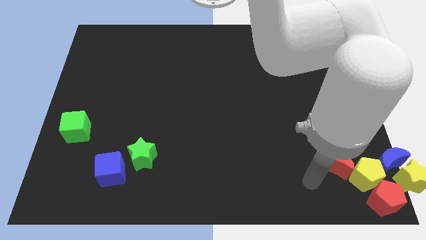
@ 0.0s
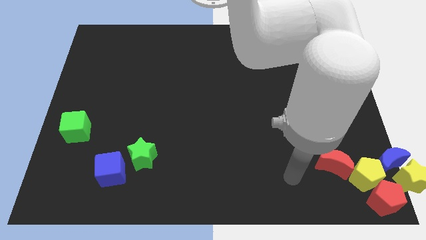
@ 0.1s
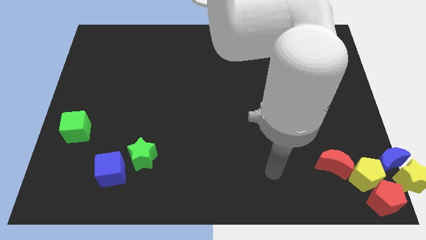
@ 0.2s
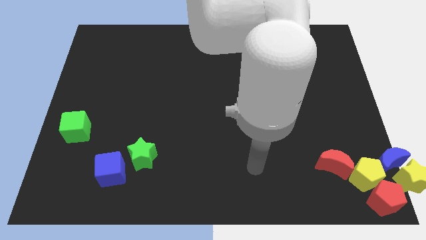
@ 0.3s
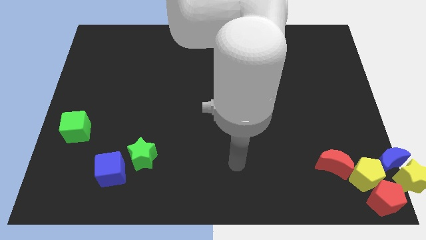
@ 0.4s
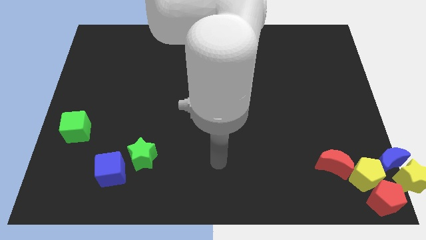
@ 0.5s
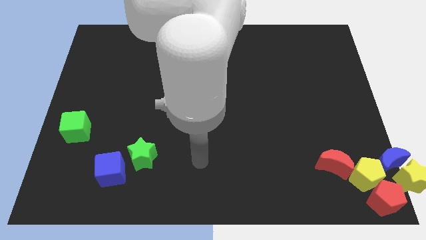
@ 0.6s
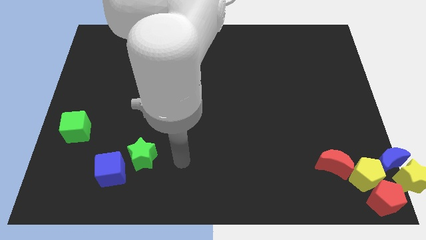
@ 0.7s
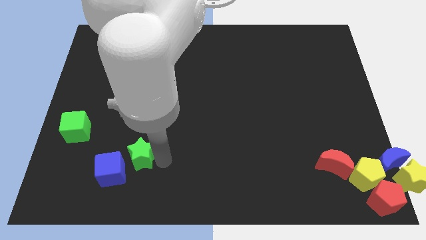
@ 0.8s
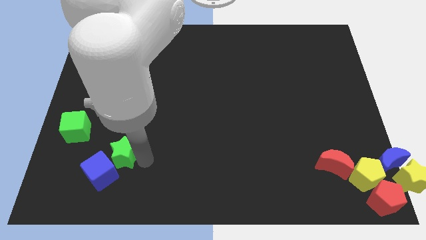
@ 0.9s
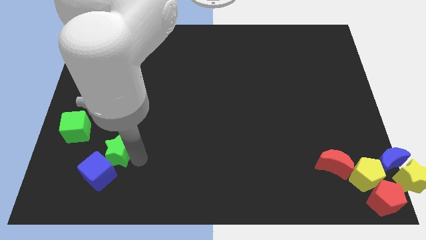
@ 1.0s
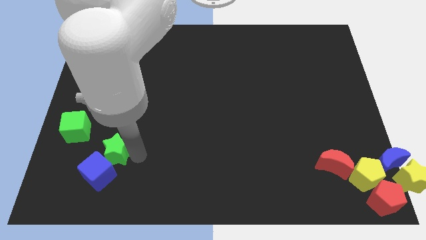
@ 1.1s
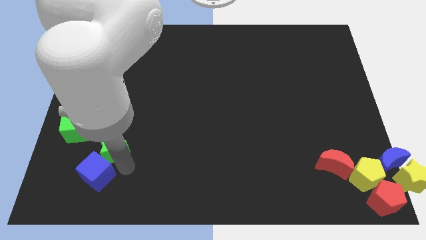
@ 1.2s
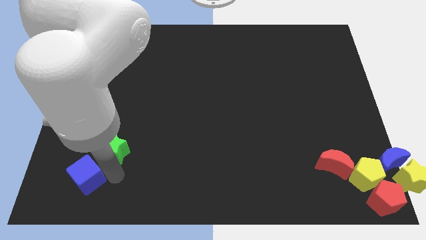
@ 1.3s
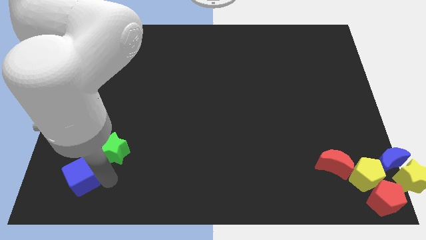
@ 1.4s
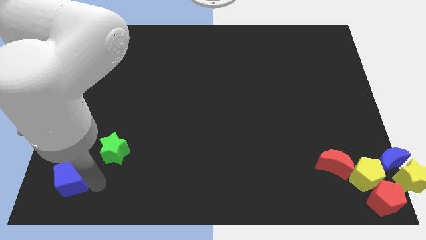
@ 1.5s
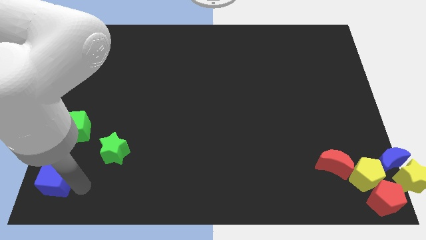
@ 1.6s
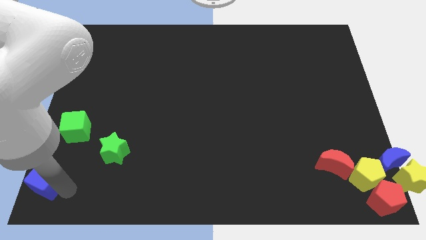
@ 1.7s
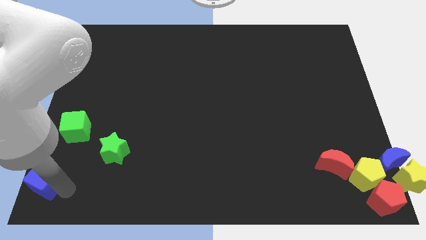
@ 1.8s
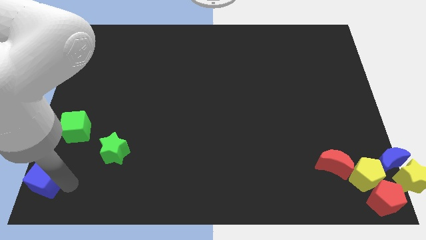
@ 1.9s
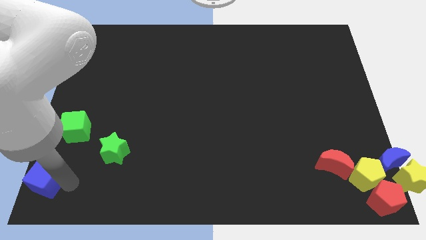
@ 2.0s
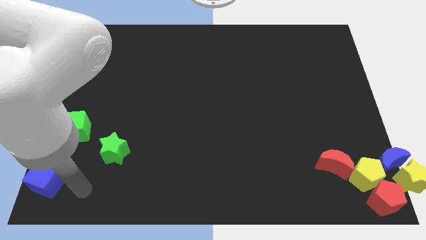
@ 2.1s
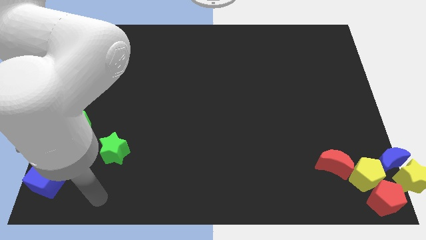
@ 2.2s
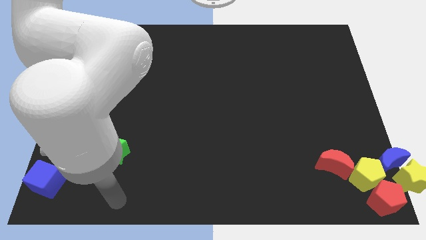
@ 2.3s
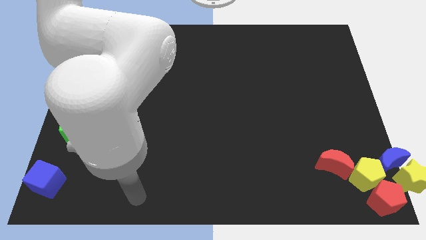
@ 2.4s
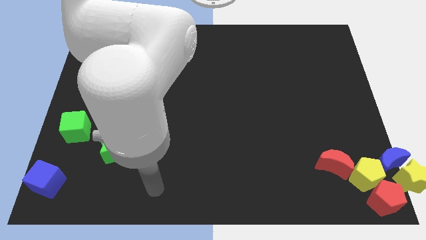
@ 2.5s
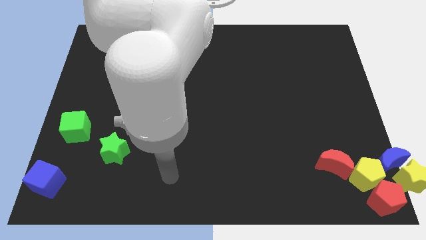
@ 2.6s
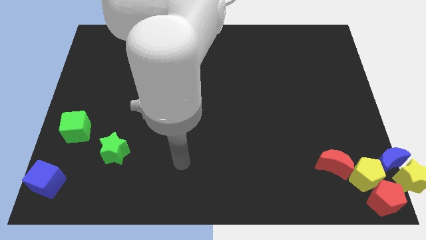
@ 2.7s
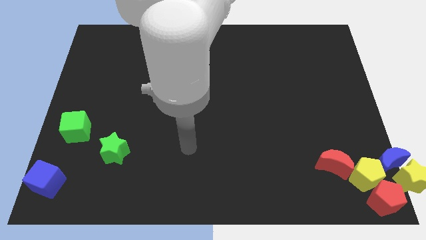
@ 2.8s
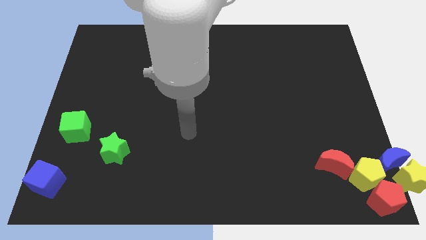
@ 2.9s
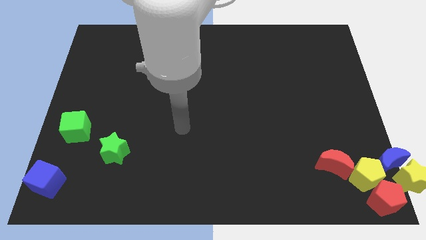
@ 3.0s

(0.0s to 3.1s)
make a triangle out of green blocks and the blue cube

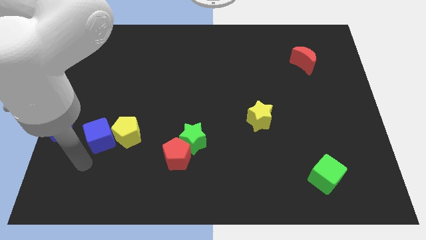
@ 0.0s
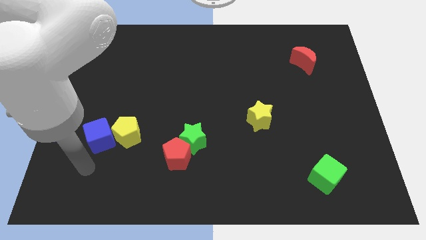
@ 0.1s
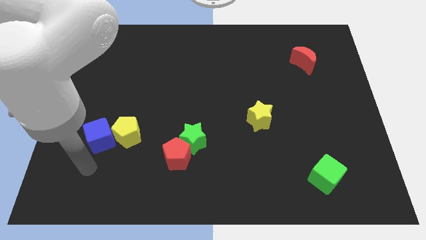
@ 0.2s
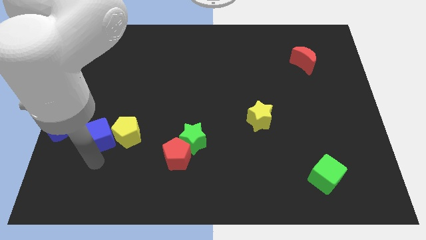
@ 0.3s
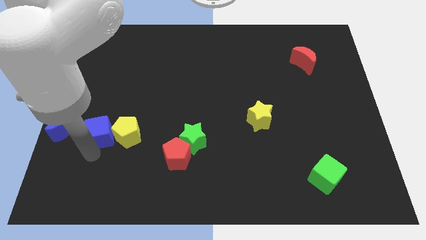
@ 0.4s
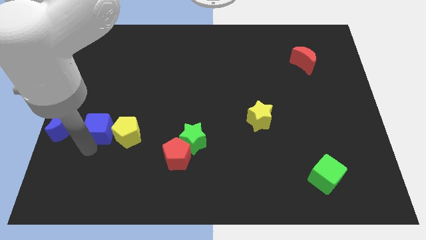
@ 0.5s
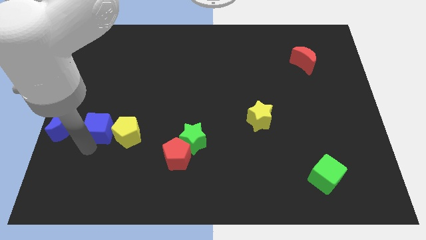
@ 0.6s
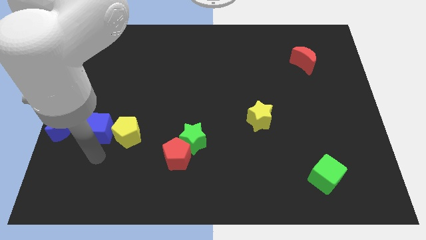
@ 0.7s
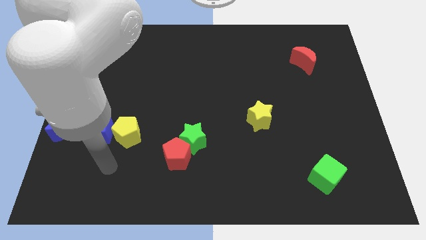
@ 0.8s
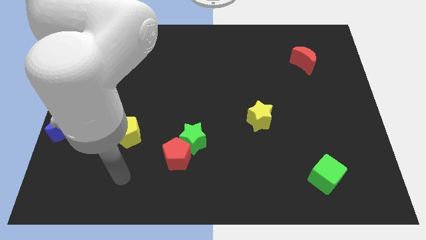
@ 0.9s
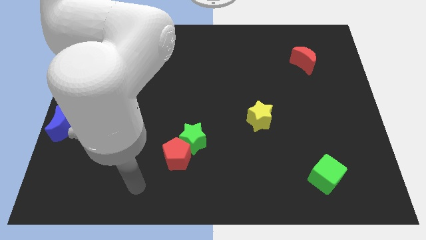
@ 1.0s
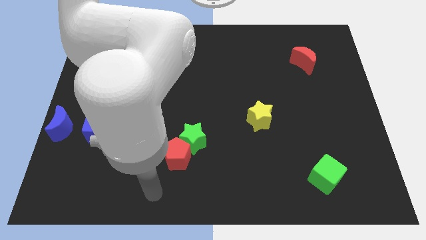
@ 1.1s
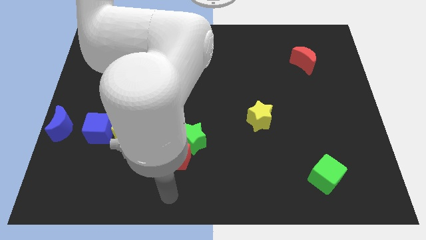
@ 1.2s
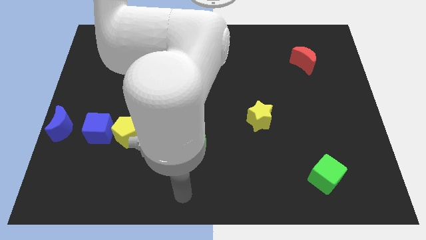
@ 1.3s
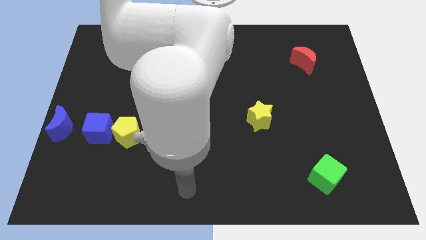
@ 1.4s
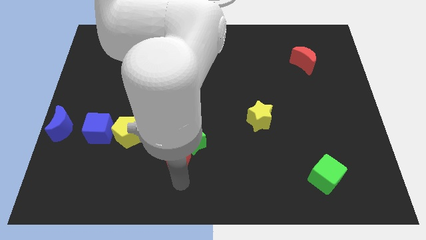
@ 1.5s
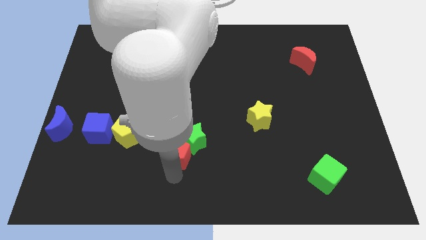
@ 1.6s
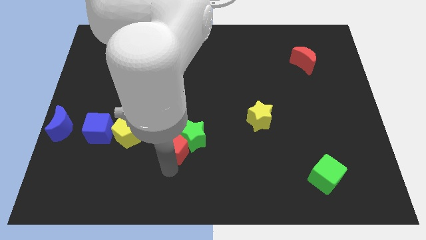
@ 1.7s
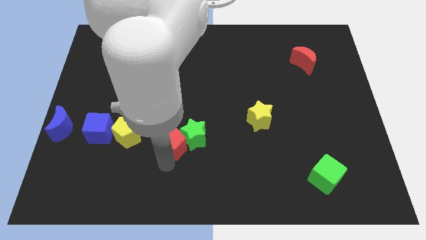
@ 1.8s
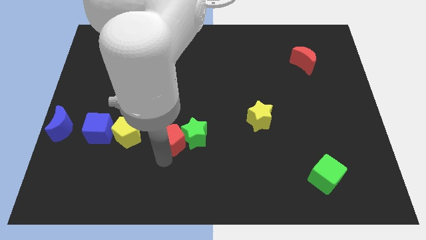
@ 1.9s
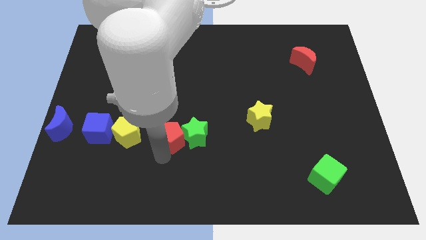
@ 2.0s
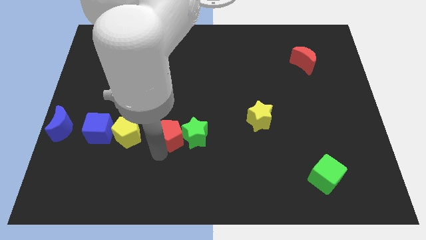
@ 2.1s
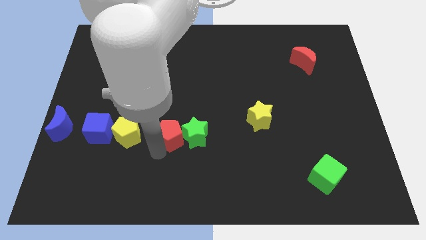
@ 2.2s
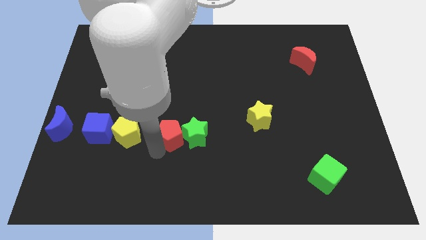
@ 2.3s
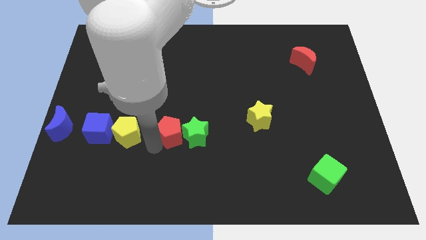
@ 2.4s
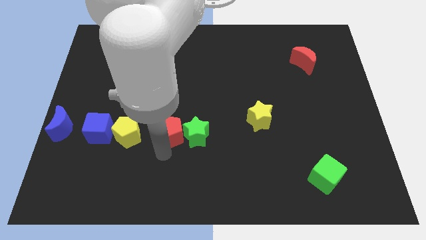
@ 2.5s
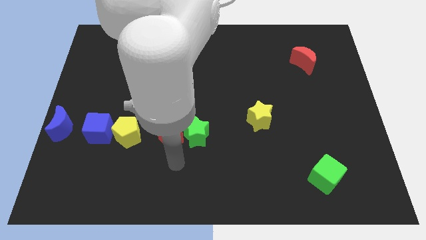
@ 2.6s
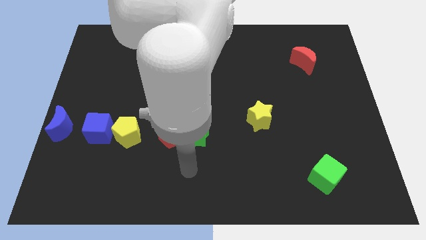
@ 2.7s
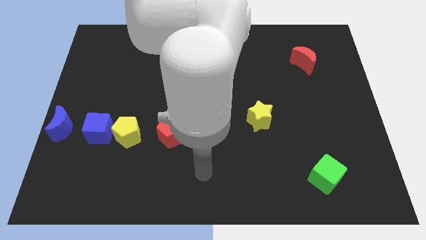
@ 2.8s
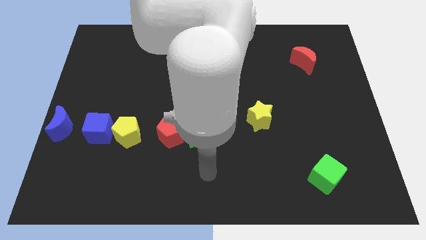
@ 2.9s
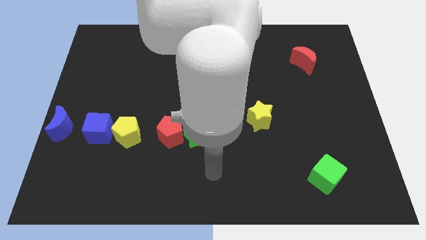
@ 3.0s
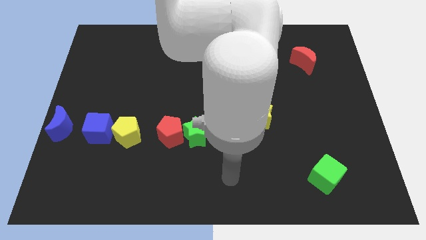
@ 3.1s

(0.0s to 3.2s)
push the red pentagon horizontally in between the yellow pentagon and the green star

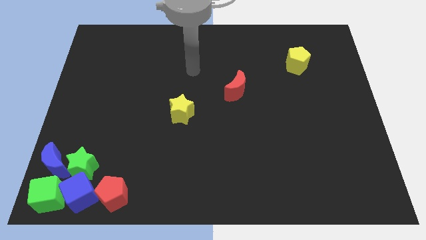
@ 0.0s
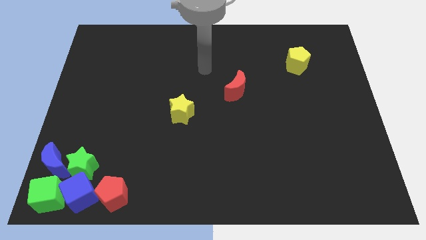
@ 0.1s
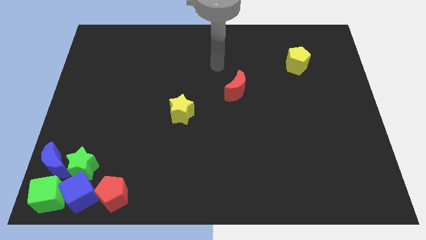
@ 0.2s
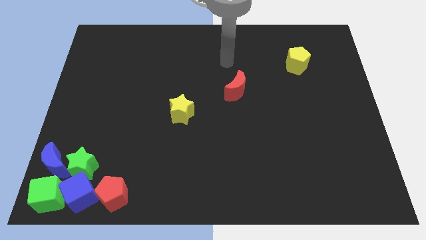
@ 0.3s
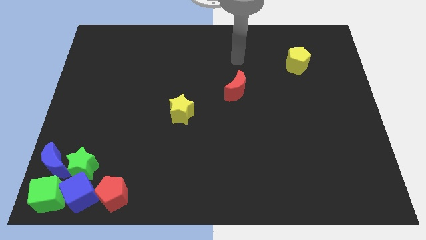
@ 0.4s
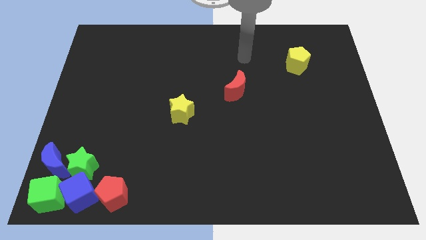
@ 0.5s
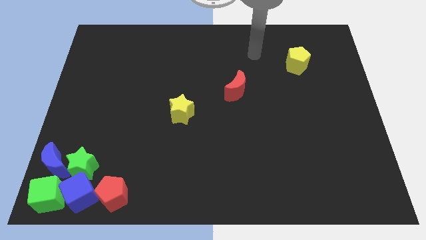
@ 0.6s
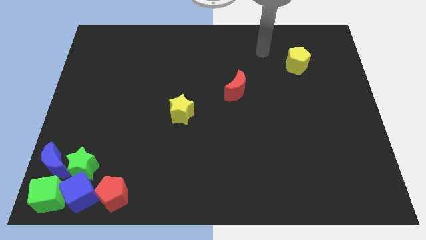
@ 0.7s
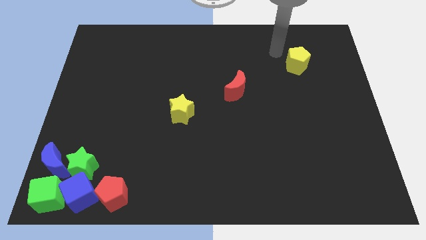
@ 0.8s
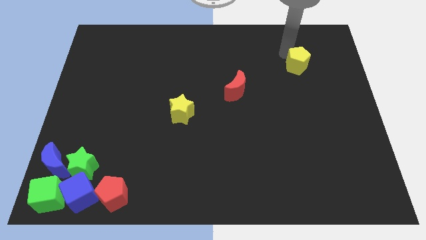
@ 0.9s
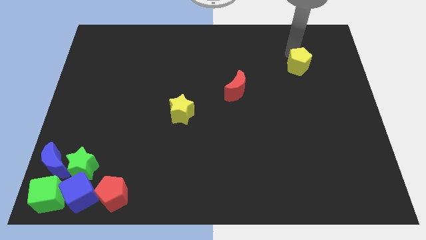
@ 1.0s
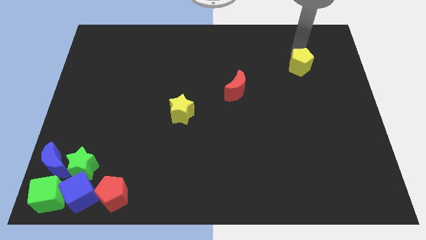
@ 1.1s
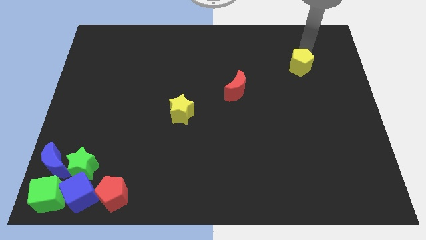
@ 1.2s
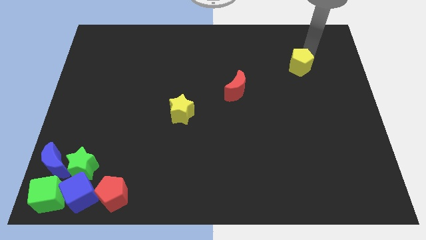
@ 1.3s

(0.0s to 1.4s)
point your arm above the yellow pentagon

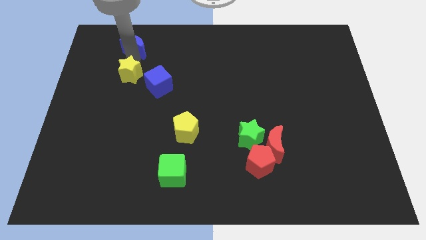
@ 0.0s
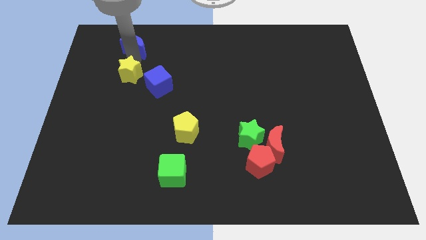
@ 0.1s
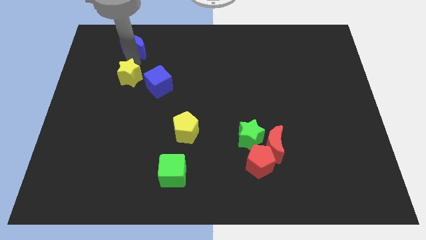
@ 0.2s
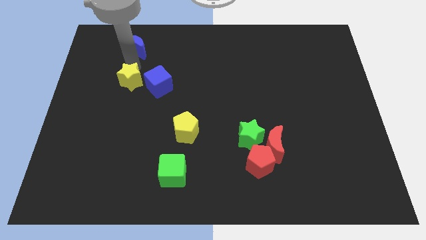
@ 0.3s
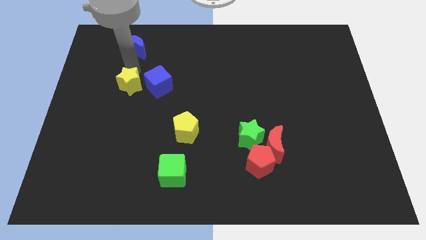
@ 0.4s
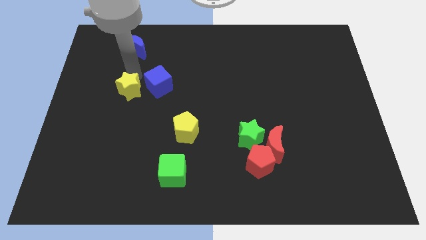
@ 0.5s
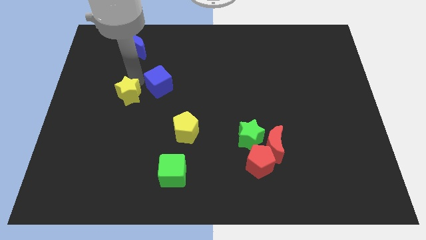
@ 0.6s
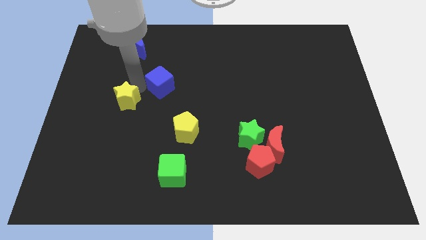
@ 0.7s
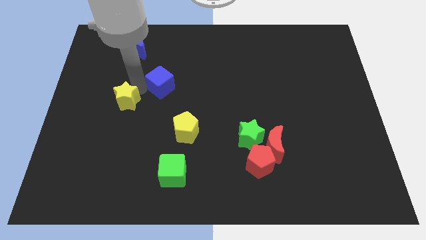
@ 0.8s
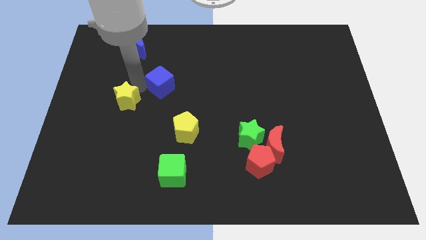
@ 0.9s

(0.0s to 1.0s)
place the yellow star diagonal to the blue cube at the bottom left side

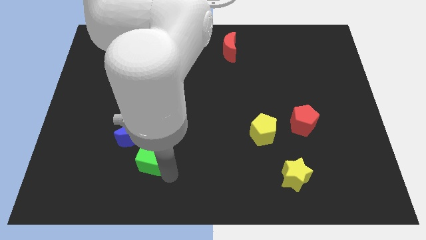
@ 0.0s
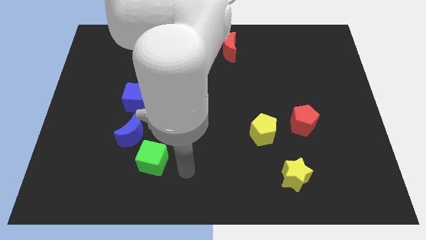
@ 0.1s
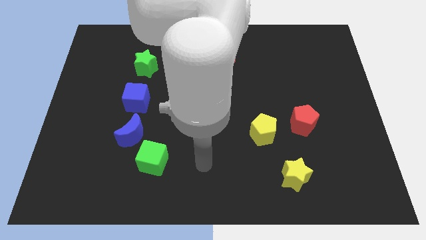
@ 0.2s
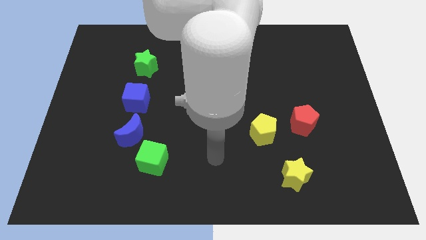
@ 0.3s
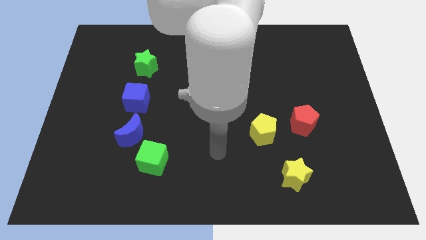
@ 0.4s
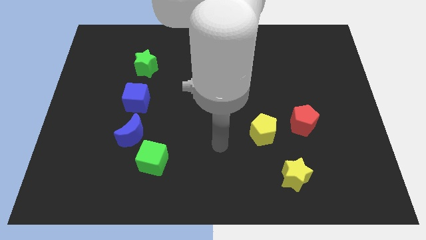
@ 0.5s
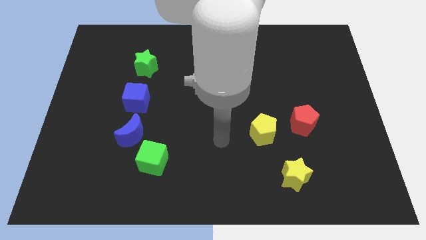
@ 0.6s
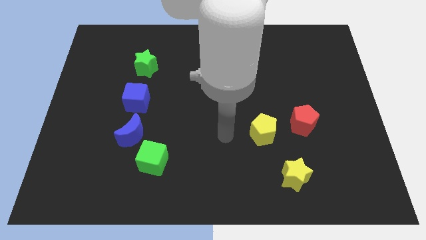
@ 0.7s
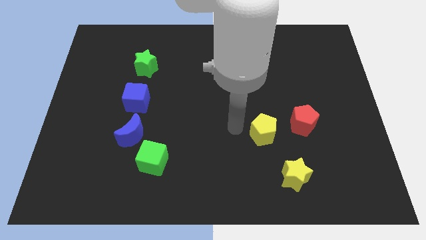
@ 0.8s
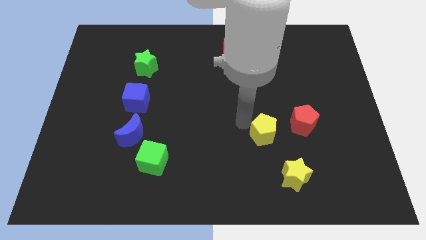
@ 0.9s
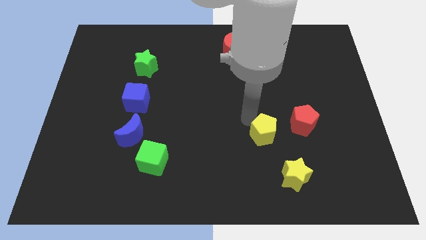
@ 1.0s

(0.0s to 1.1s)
move your arm away from the green cube
